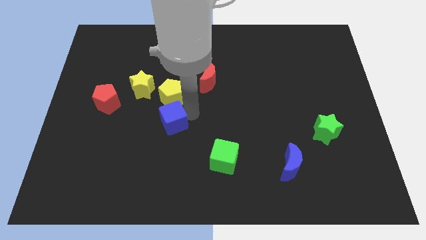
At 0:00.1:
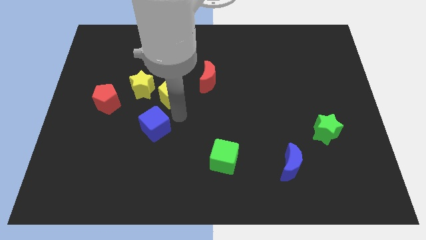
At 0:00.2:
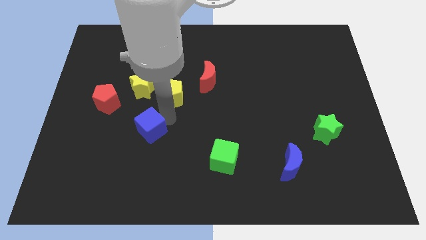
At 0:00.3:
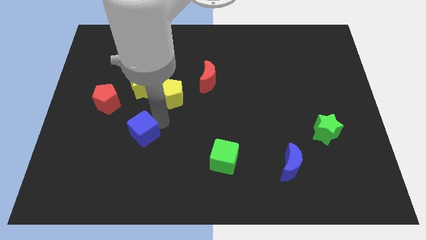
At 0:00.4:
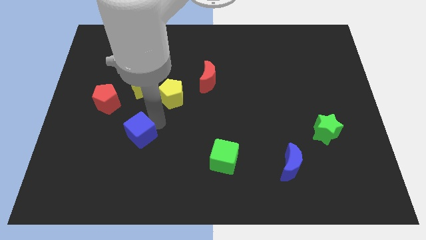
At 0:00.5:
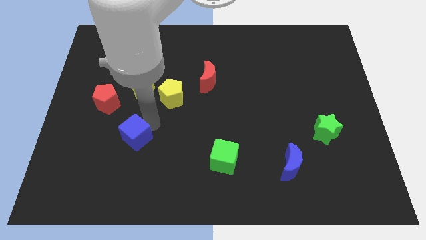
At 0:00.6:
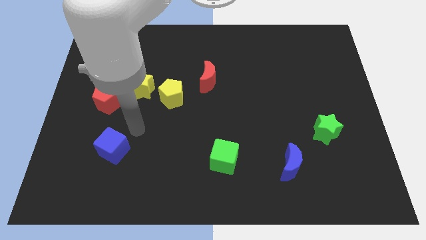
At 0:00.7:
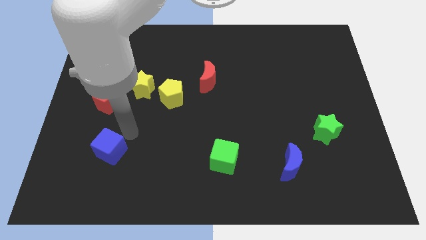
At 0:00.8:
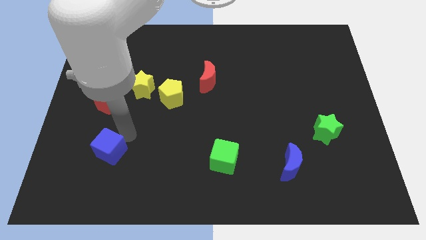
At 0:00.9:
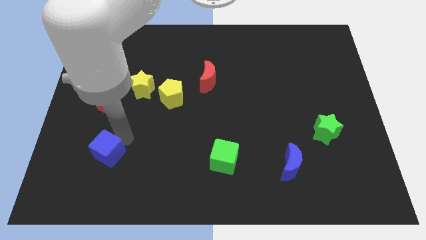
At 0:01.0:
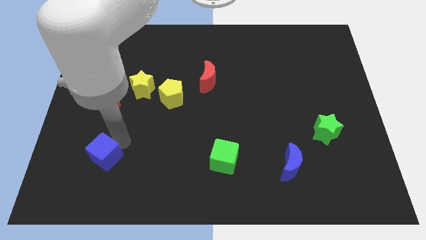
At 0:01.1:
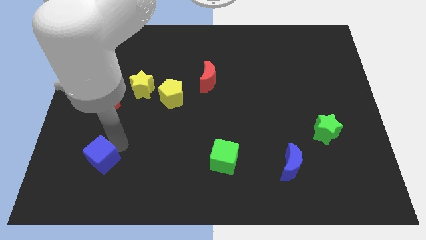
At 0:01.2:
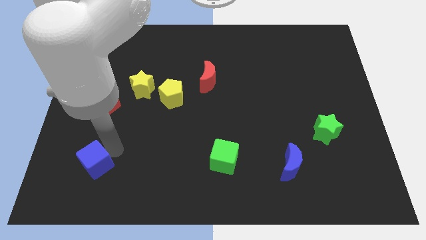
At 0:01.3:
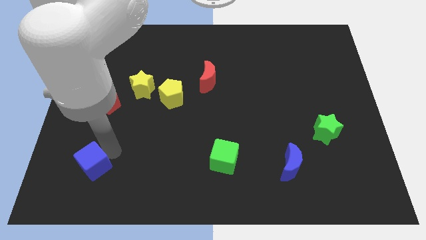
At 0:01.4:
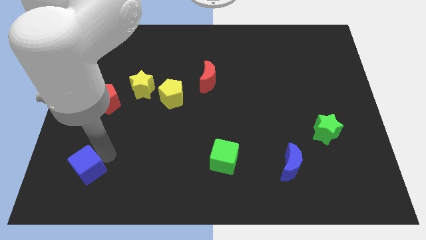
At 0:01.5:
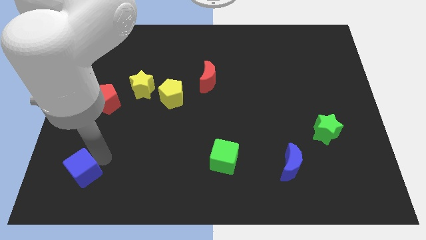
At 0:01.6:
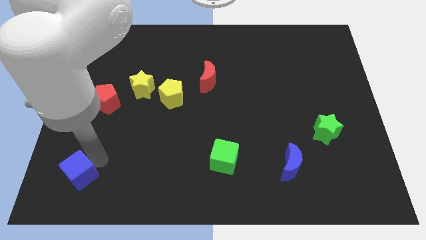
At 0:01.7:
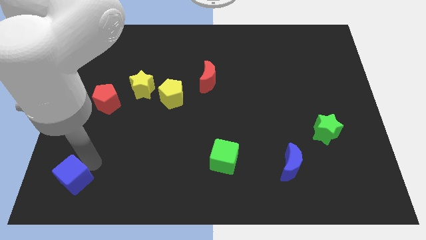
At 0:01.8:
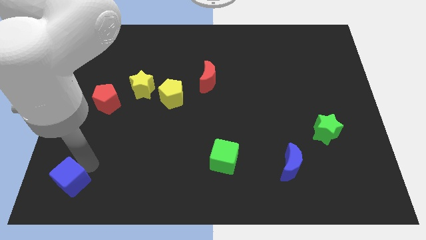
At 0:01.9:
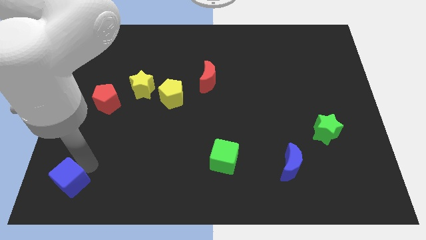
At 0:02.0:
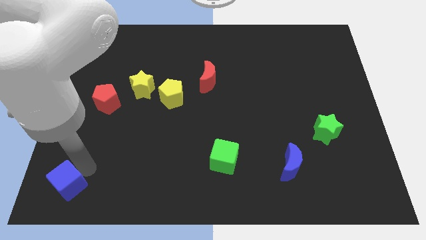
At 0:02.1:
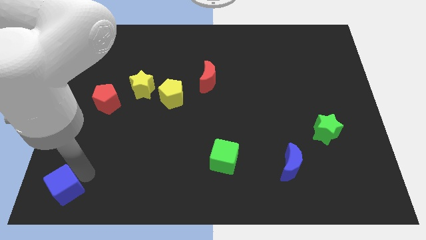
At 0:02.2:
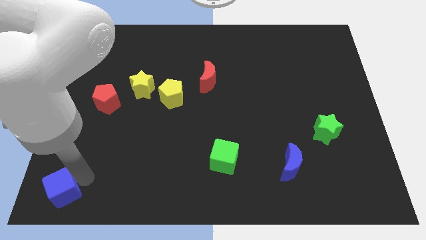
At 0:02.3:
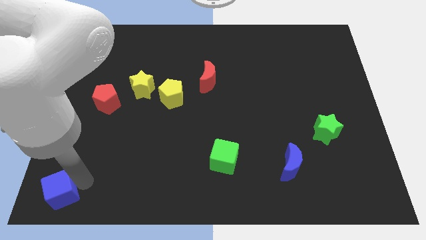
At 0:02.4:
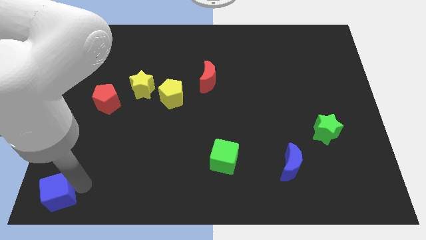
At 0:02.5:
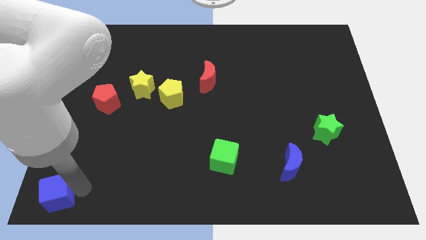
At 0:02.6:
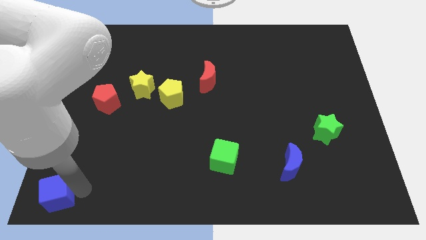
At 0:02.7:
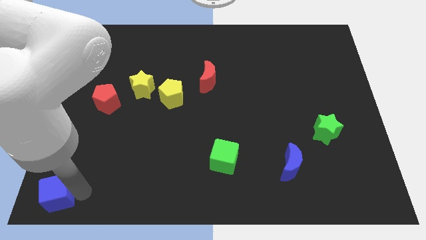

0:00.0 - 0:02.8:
slide the blue cube towards the bottom left corner of the board

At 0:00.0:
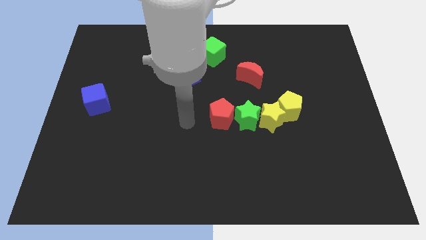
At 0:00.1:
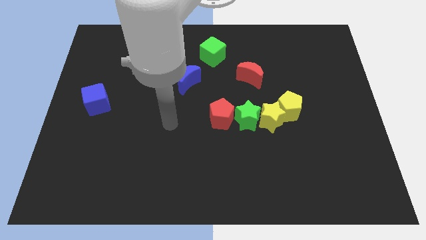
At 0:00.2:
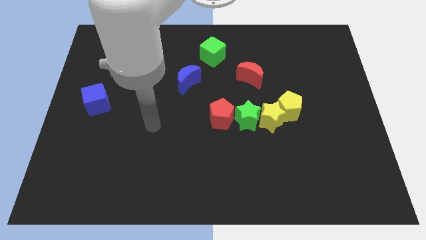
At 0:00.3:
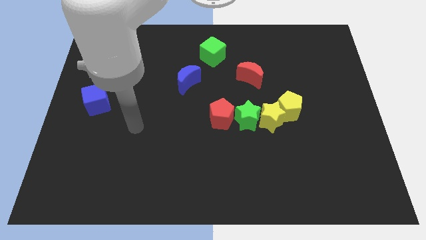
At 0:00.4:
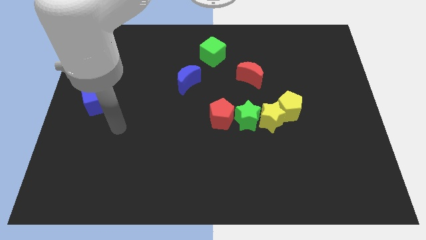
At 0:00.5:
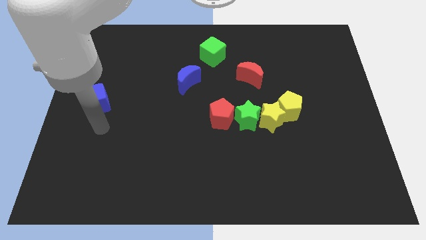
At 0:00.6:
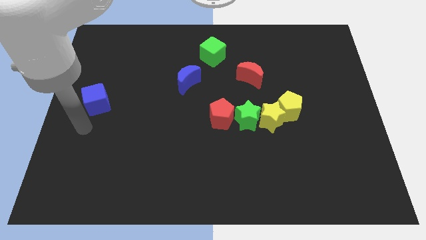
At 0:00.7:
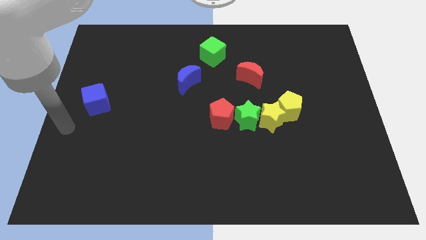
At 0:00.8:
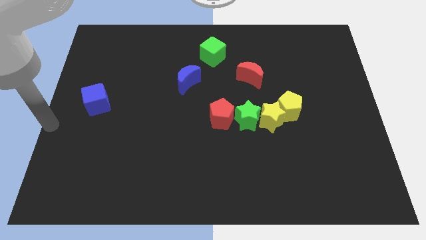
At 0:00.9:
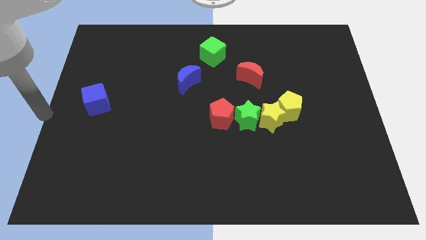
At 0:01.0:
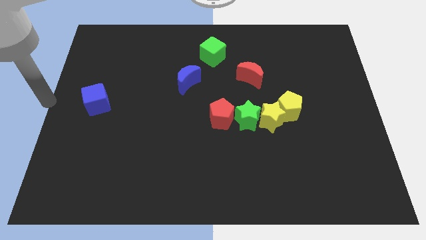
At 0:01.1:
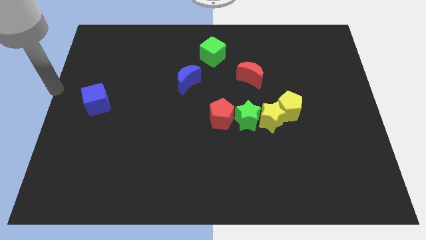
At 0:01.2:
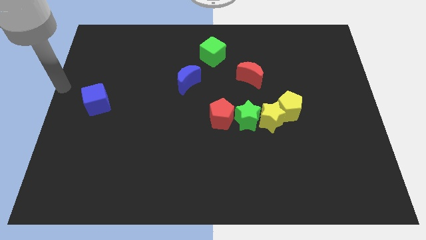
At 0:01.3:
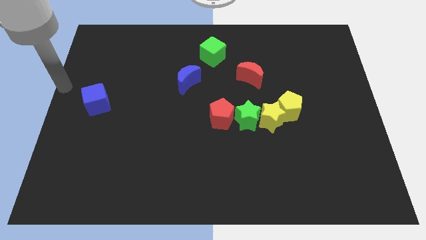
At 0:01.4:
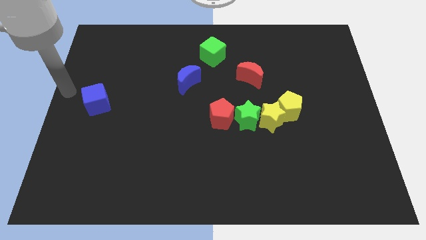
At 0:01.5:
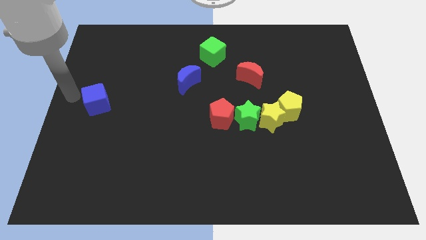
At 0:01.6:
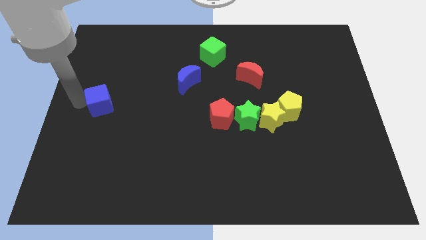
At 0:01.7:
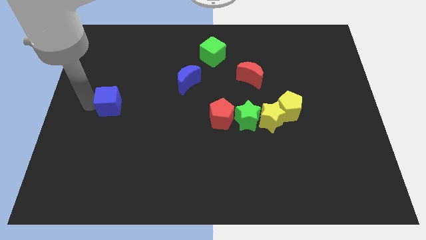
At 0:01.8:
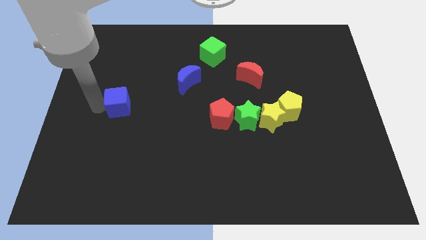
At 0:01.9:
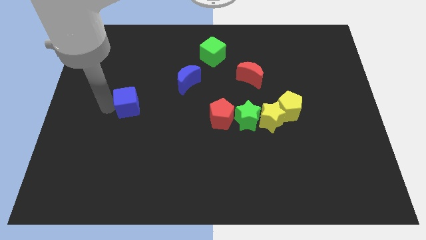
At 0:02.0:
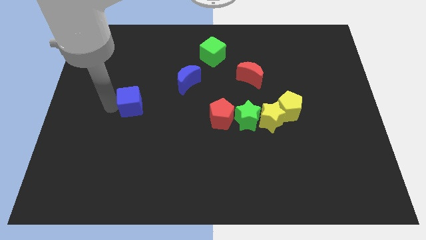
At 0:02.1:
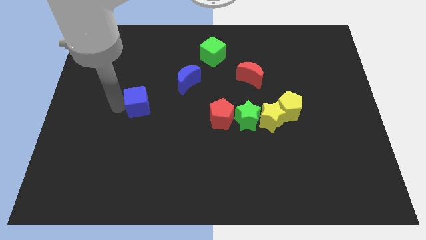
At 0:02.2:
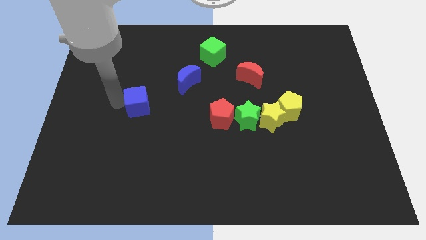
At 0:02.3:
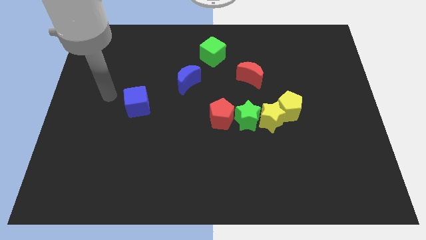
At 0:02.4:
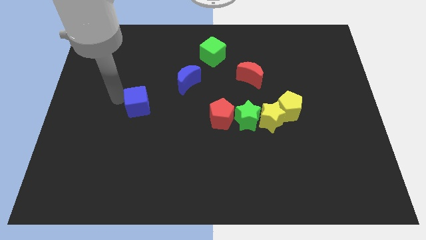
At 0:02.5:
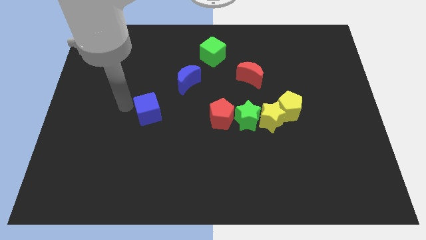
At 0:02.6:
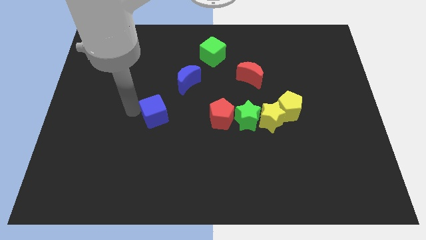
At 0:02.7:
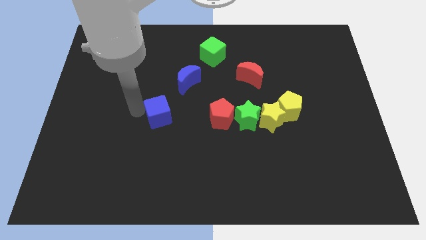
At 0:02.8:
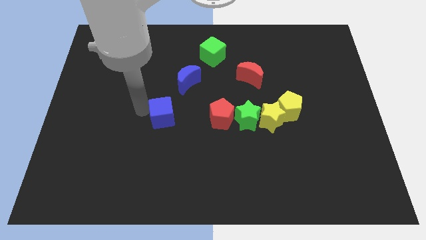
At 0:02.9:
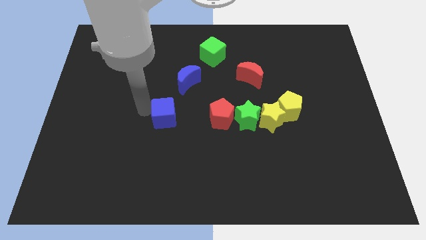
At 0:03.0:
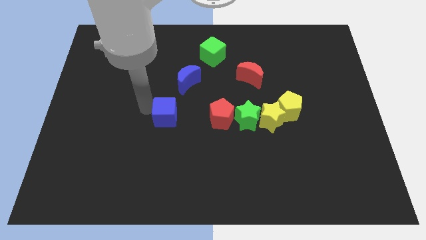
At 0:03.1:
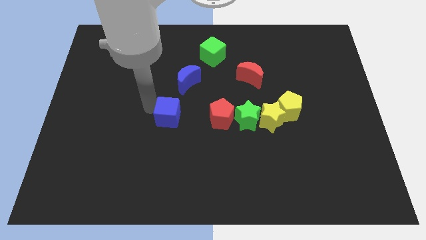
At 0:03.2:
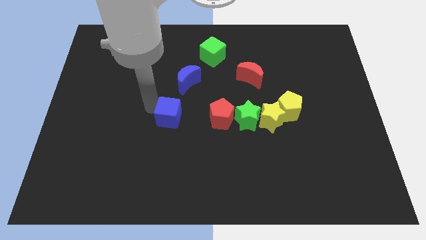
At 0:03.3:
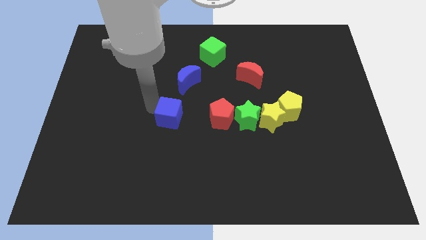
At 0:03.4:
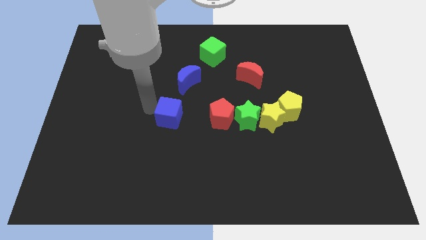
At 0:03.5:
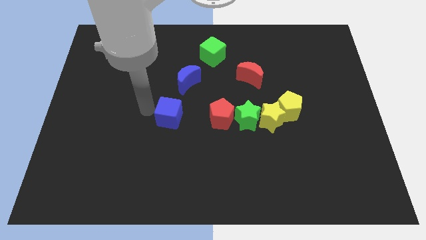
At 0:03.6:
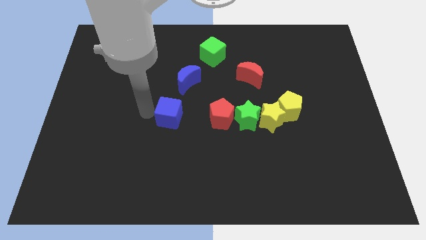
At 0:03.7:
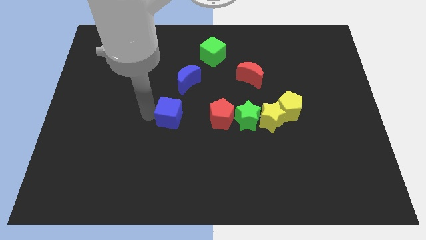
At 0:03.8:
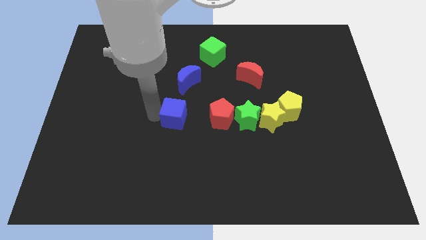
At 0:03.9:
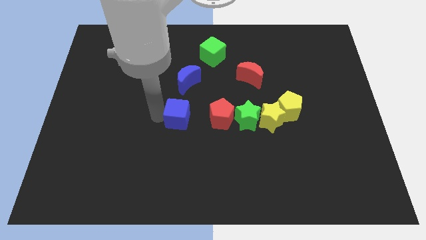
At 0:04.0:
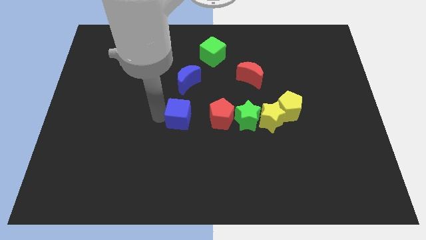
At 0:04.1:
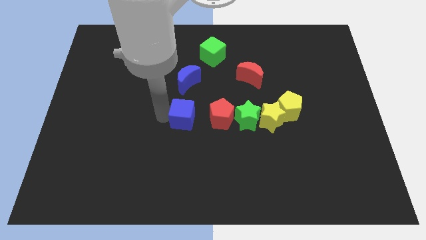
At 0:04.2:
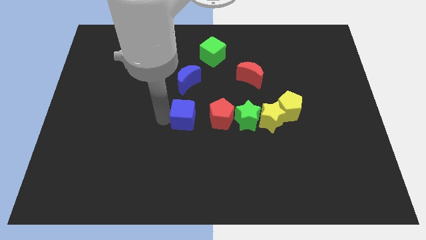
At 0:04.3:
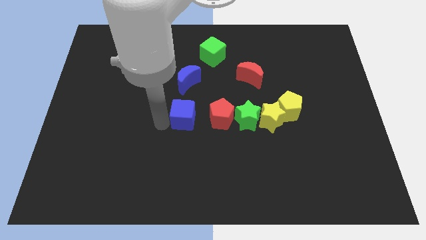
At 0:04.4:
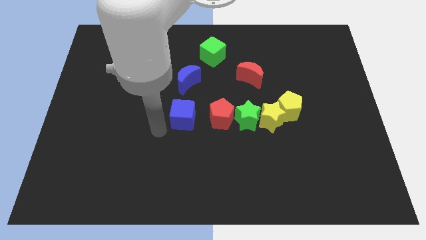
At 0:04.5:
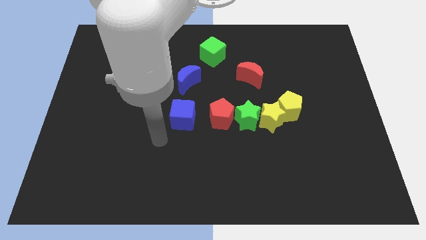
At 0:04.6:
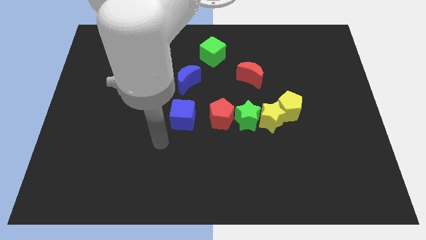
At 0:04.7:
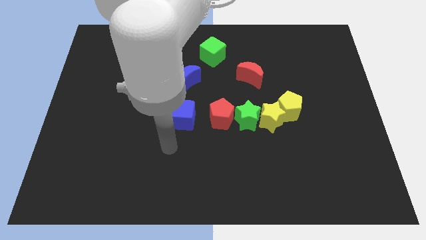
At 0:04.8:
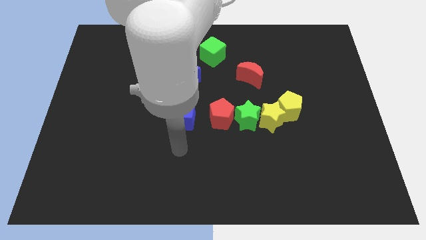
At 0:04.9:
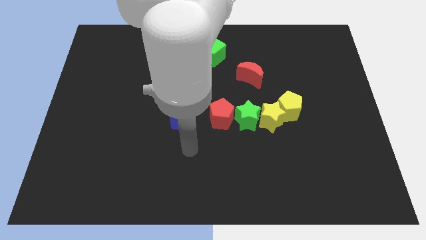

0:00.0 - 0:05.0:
place the blue cube vertically below the blue moon

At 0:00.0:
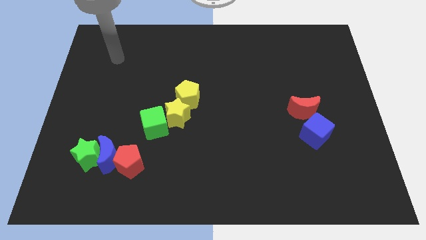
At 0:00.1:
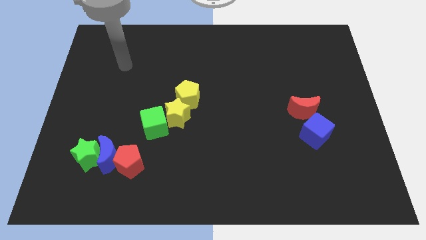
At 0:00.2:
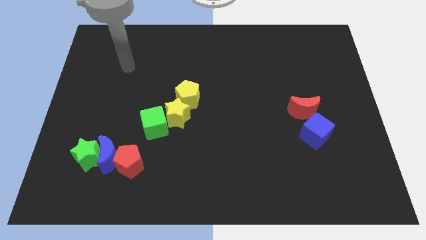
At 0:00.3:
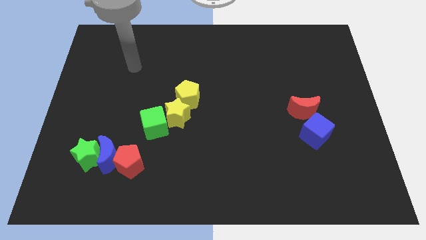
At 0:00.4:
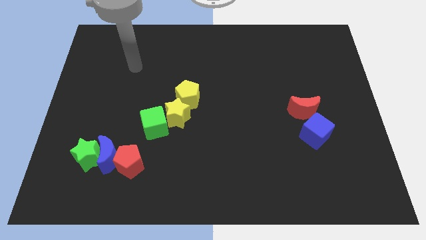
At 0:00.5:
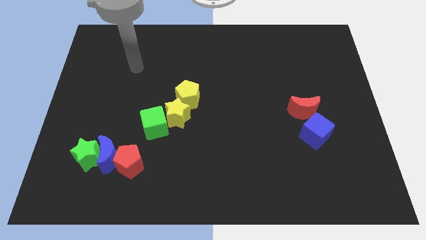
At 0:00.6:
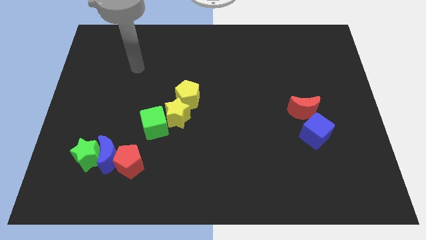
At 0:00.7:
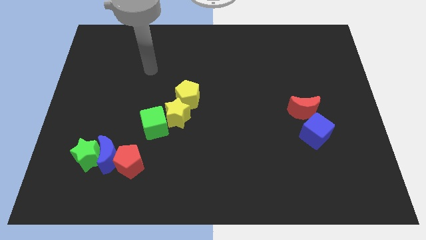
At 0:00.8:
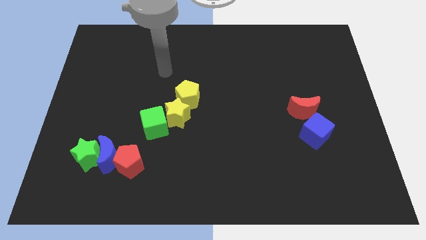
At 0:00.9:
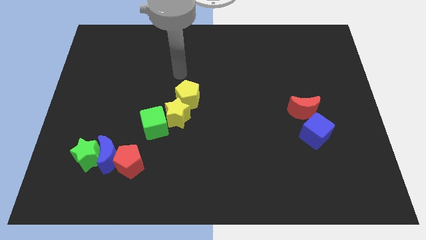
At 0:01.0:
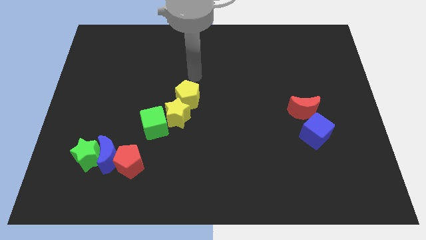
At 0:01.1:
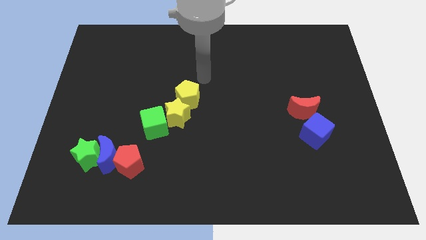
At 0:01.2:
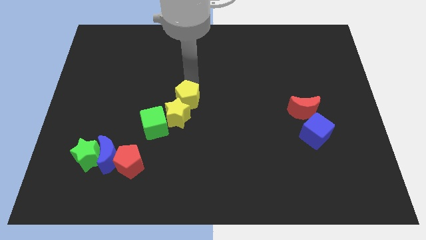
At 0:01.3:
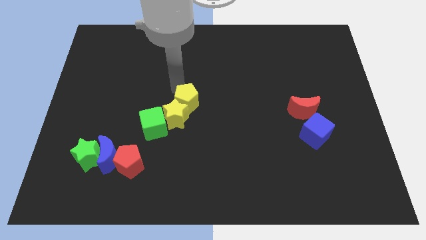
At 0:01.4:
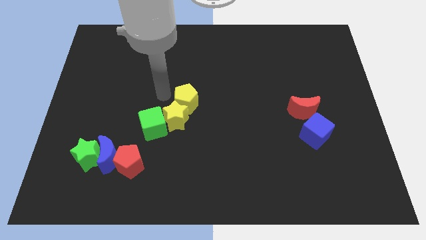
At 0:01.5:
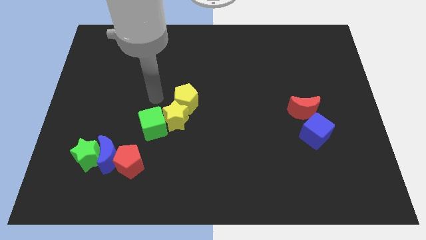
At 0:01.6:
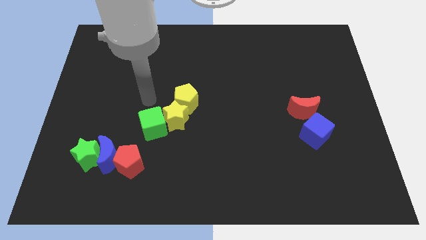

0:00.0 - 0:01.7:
slightly touch above the yellow pentagon
